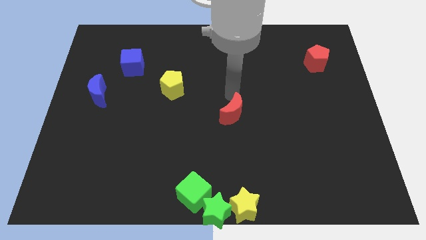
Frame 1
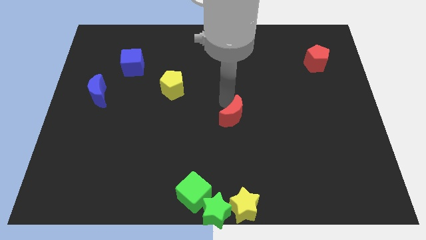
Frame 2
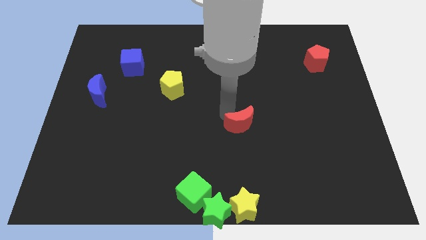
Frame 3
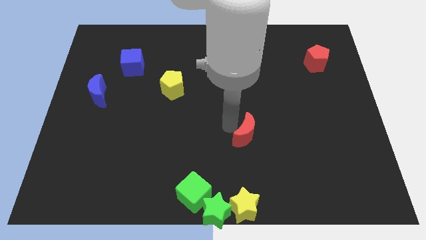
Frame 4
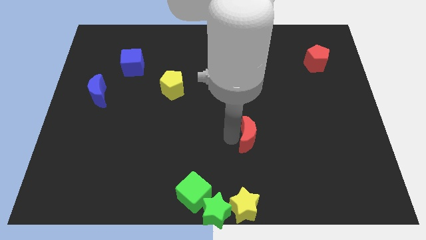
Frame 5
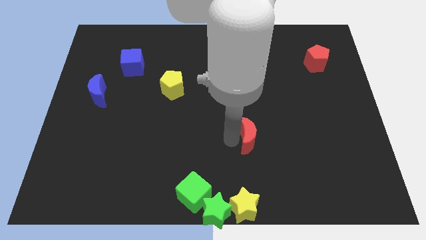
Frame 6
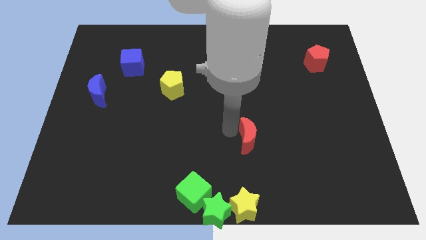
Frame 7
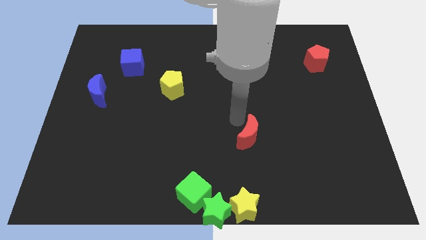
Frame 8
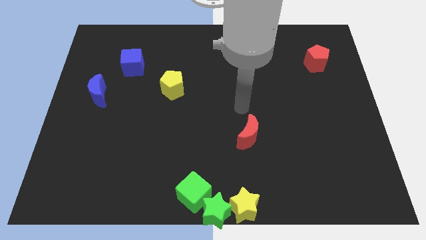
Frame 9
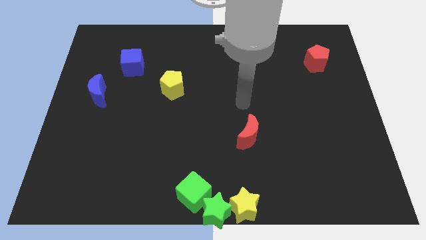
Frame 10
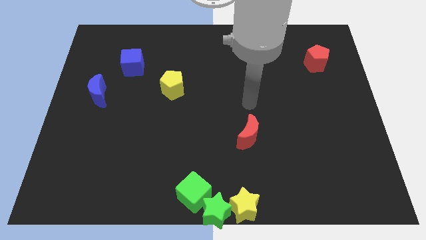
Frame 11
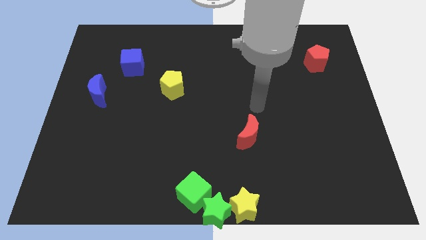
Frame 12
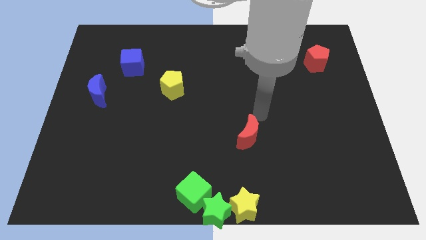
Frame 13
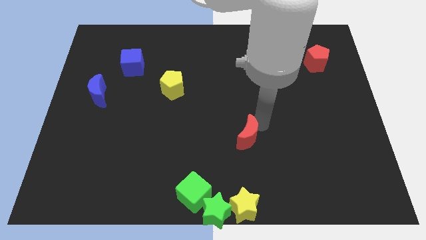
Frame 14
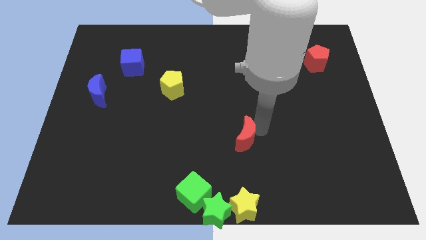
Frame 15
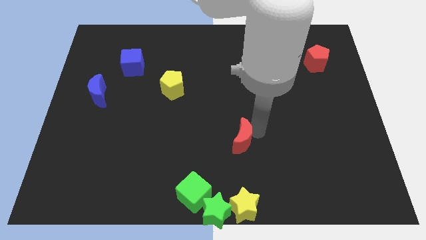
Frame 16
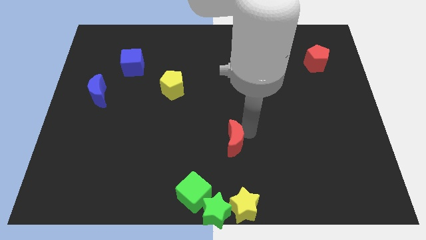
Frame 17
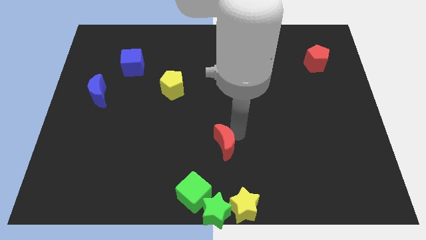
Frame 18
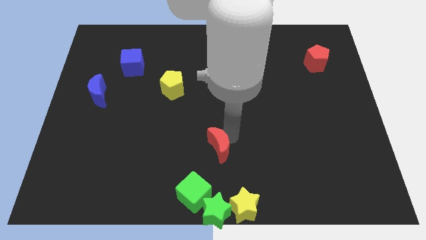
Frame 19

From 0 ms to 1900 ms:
place the red moon above the green star

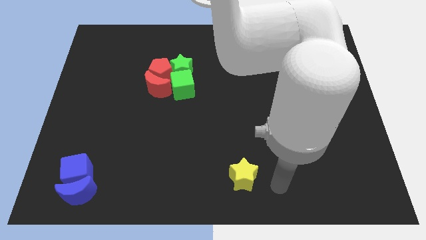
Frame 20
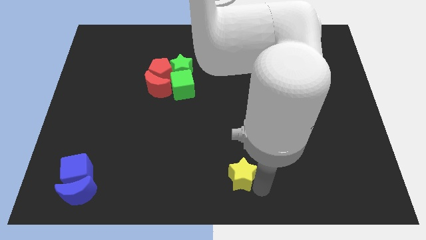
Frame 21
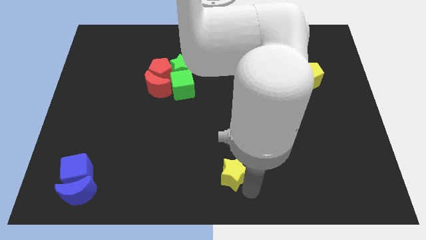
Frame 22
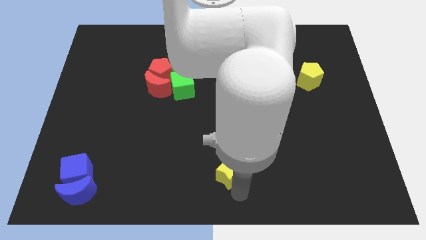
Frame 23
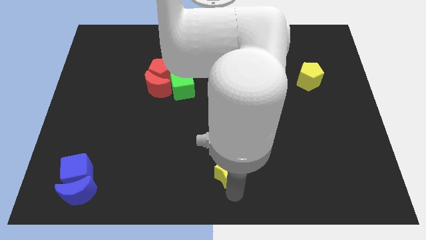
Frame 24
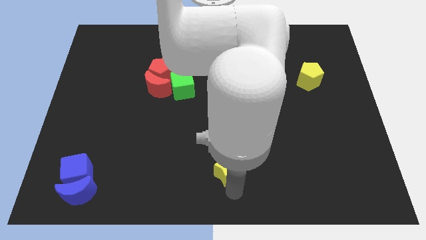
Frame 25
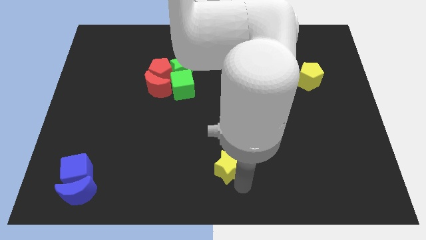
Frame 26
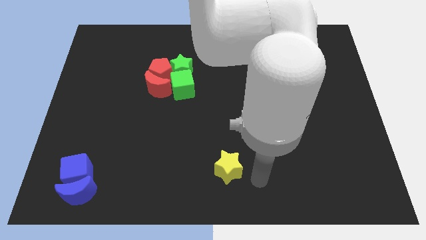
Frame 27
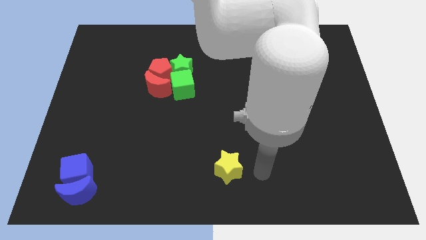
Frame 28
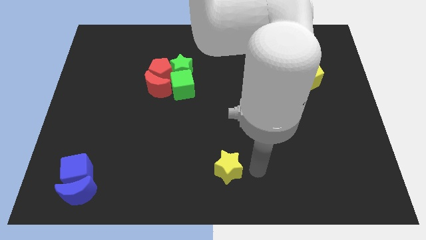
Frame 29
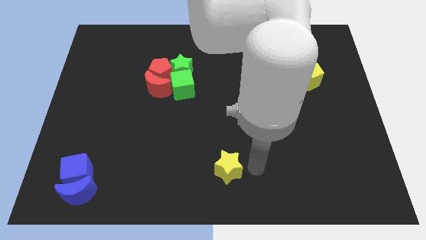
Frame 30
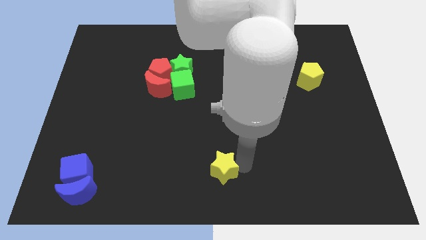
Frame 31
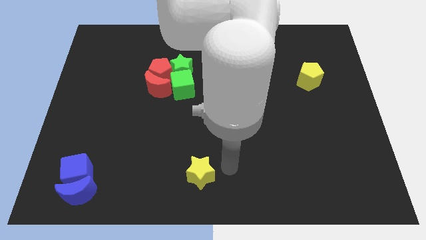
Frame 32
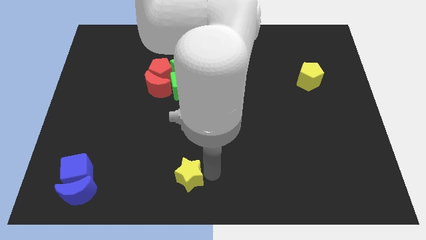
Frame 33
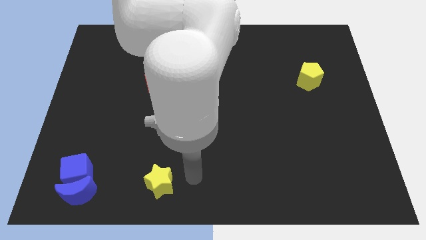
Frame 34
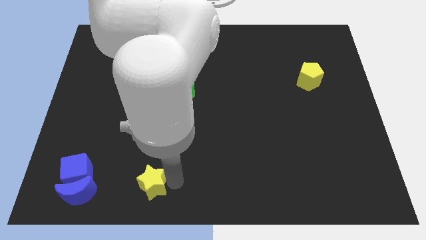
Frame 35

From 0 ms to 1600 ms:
move the yellow star towards the blue blocks

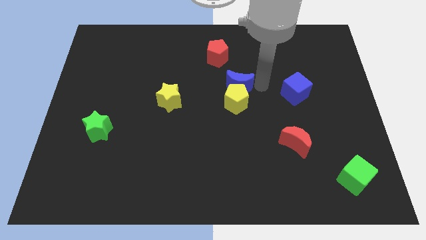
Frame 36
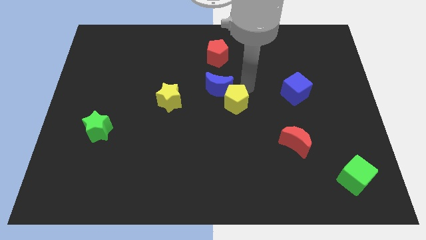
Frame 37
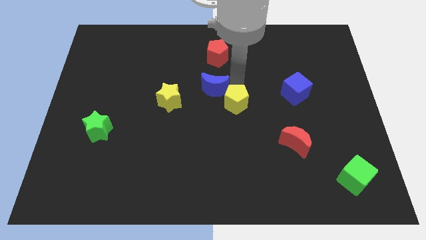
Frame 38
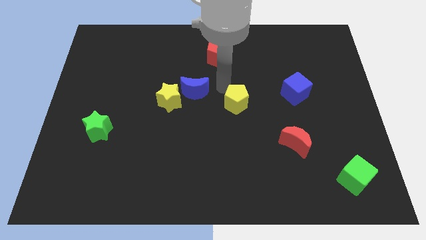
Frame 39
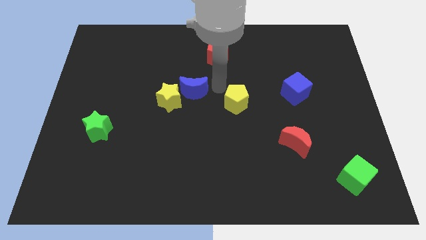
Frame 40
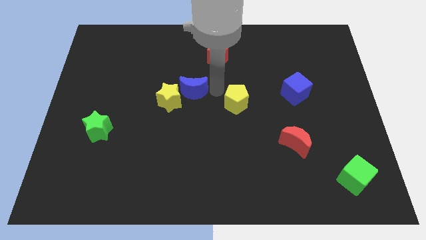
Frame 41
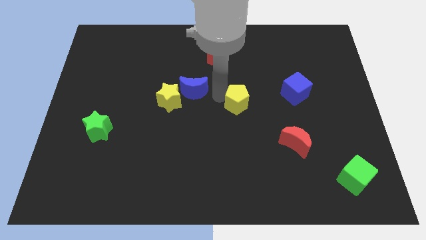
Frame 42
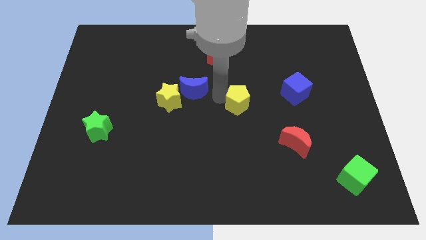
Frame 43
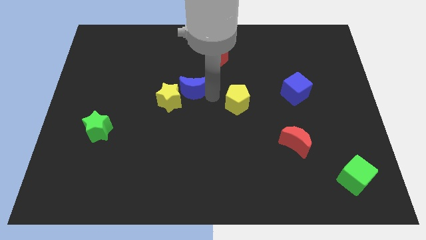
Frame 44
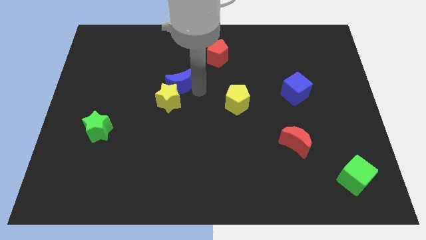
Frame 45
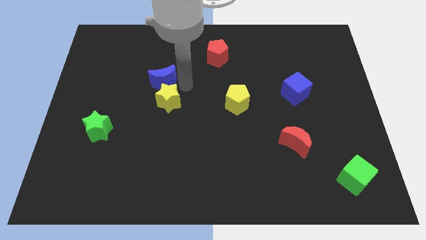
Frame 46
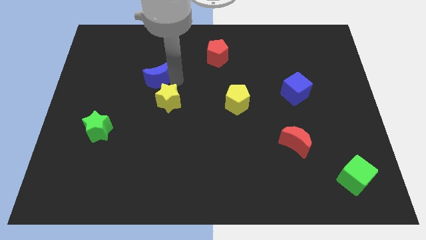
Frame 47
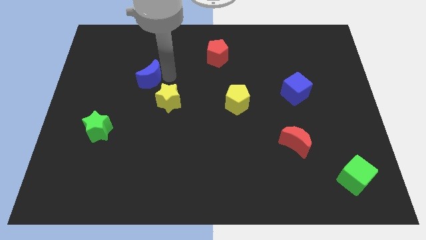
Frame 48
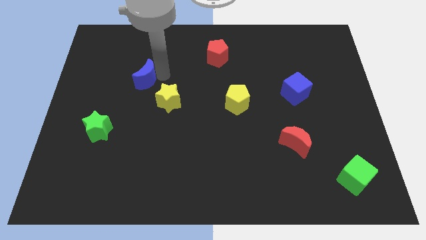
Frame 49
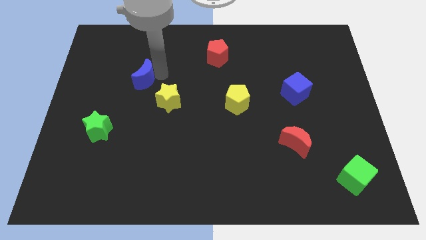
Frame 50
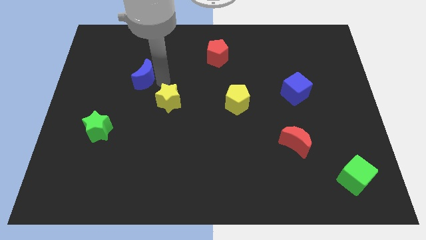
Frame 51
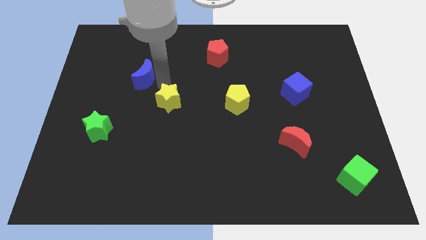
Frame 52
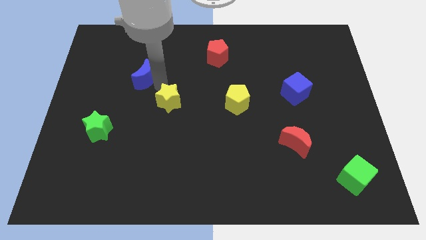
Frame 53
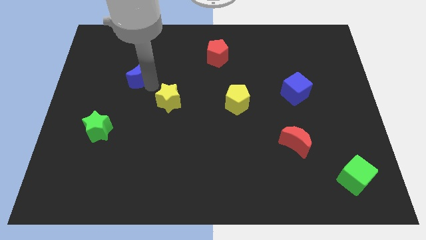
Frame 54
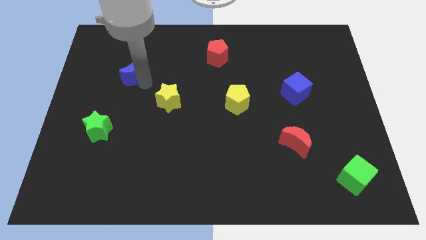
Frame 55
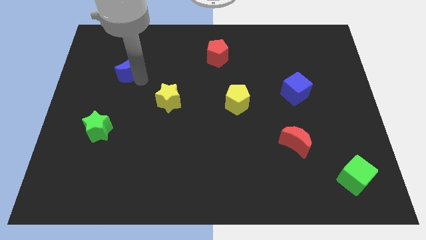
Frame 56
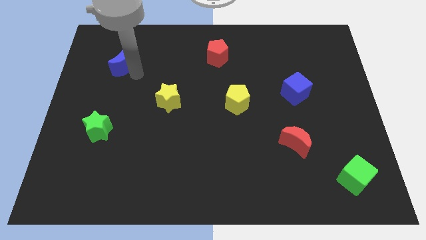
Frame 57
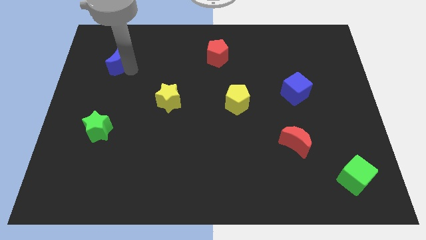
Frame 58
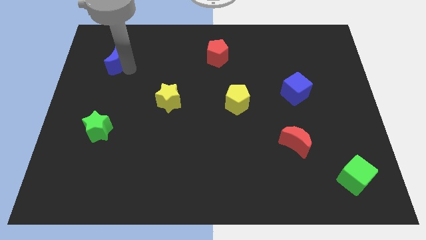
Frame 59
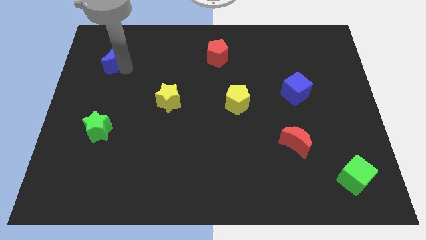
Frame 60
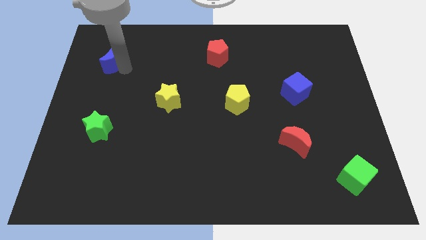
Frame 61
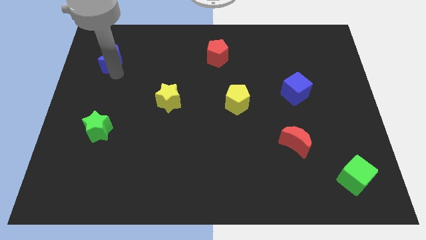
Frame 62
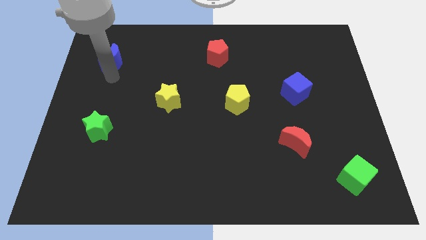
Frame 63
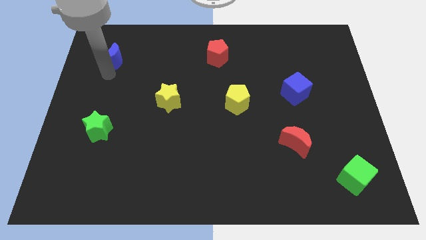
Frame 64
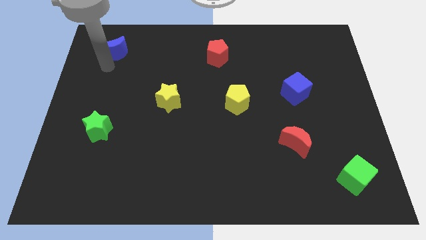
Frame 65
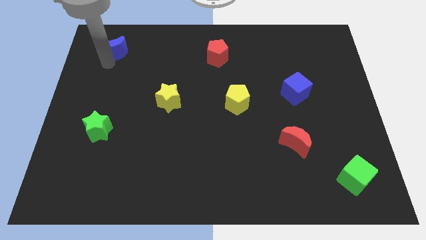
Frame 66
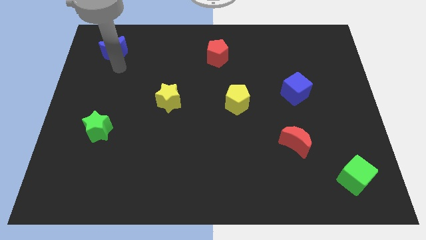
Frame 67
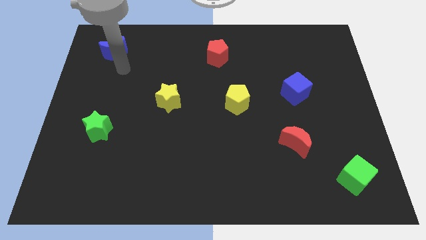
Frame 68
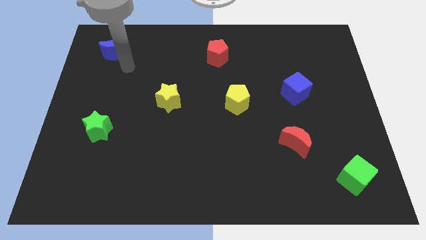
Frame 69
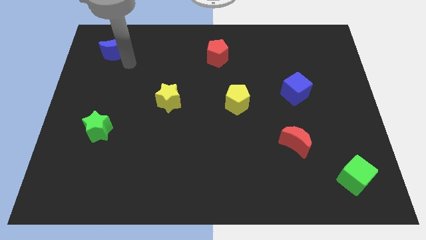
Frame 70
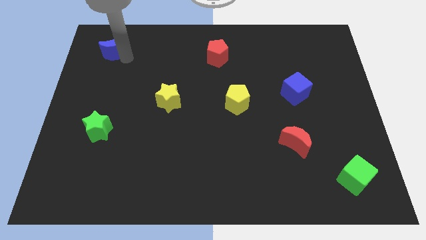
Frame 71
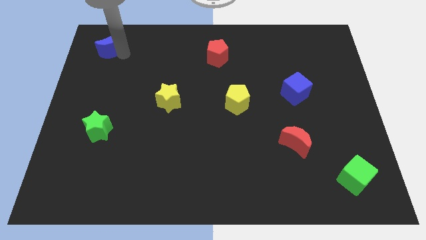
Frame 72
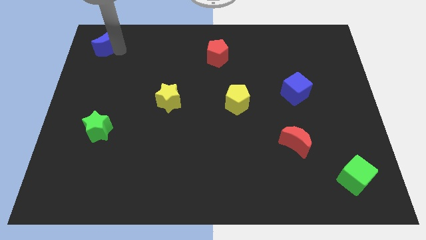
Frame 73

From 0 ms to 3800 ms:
move the blue crescent to the top left of the board

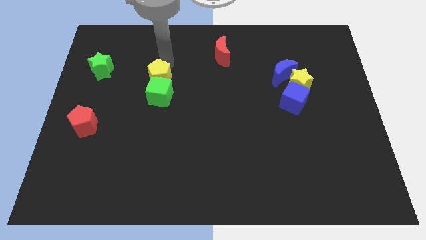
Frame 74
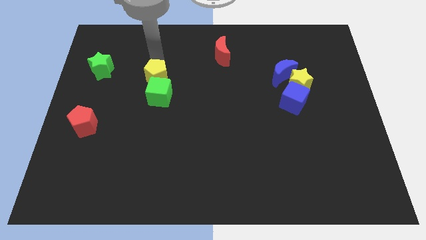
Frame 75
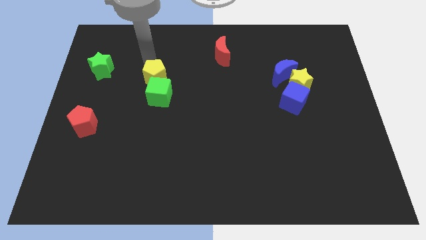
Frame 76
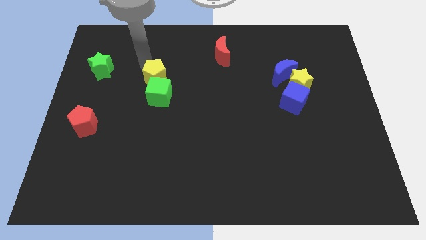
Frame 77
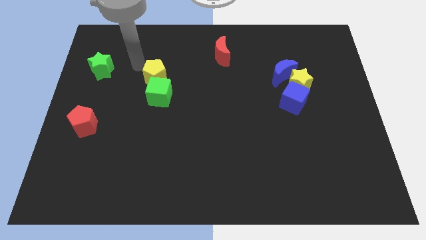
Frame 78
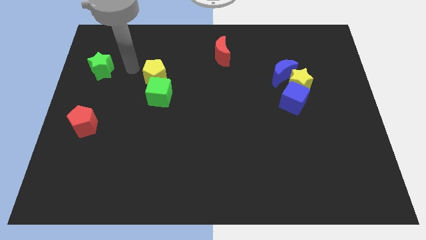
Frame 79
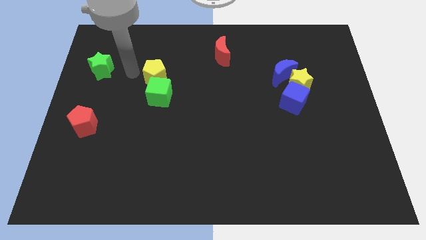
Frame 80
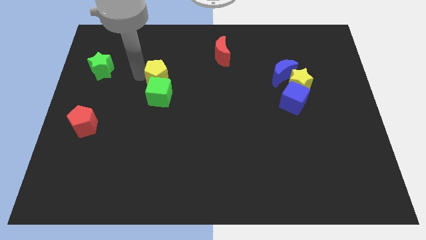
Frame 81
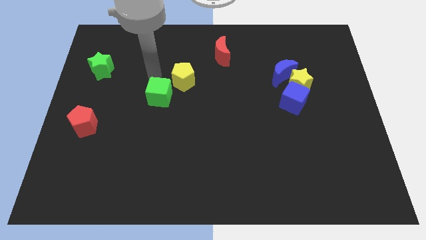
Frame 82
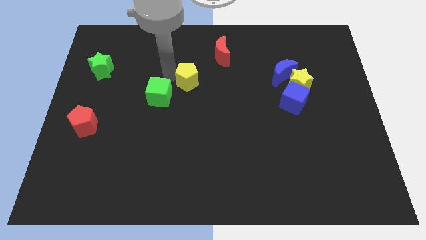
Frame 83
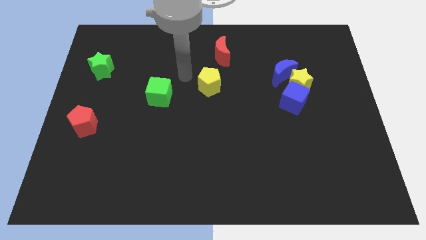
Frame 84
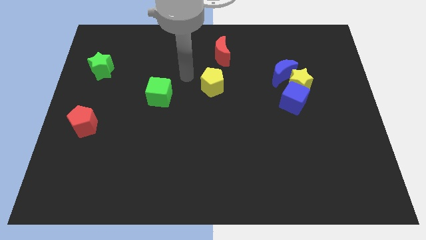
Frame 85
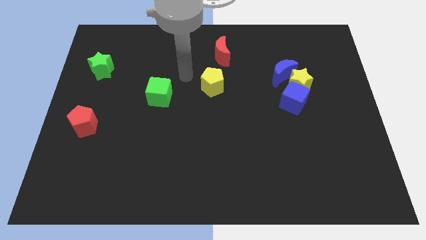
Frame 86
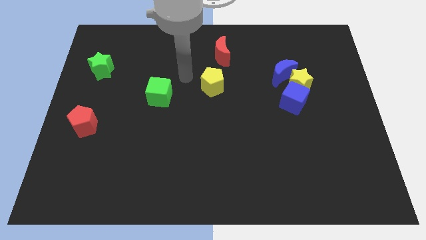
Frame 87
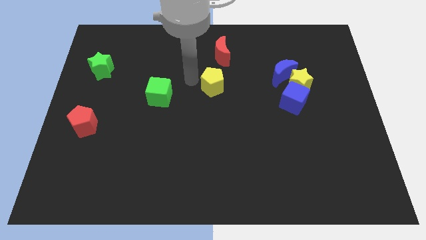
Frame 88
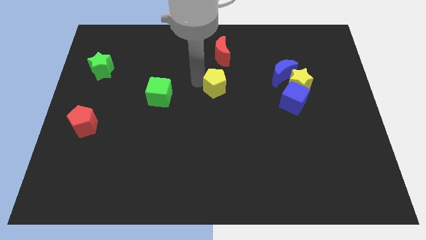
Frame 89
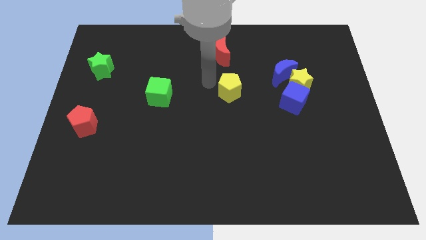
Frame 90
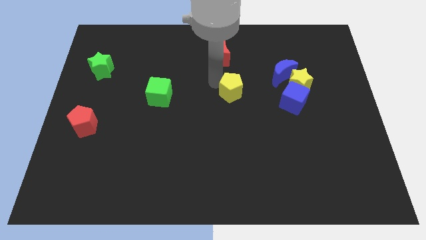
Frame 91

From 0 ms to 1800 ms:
put the yellow pentagon below the red moon
